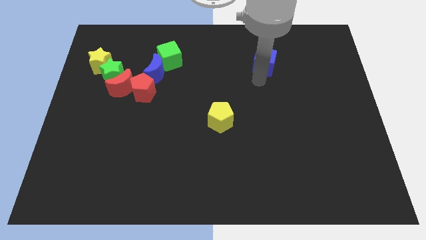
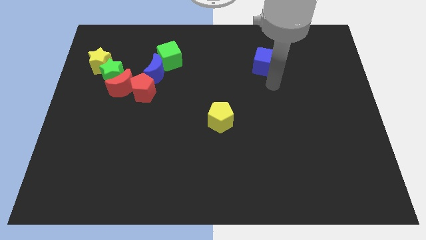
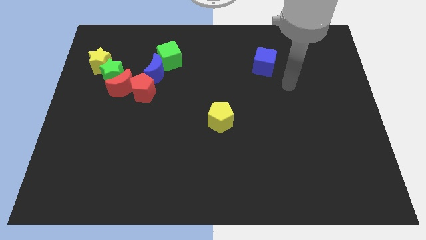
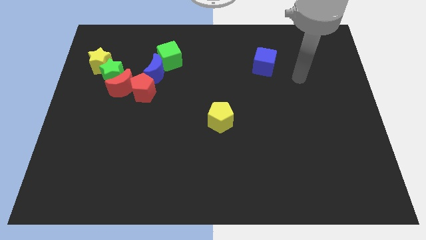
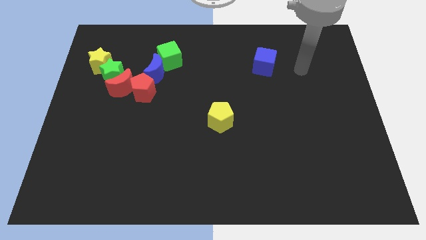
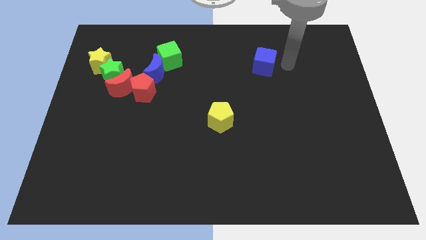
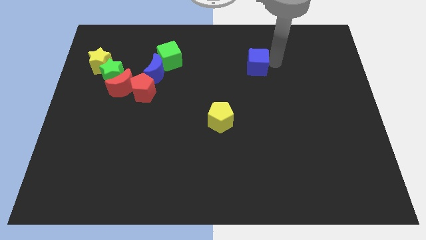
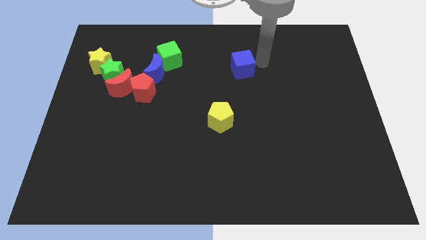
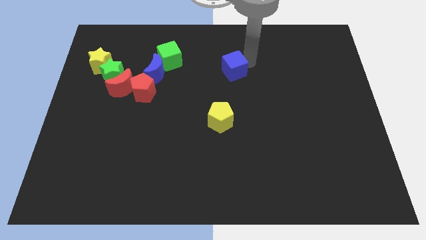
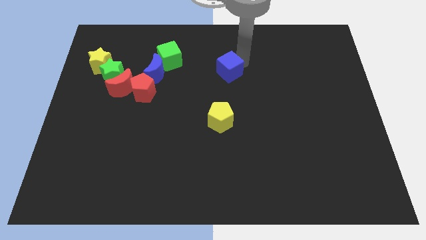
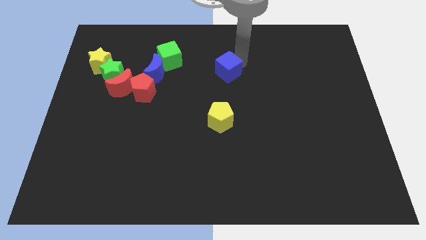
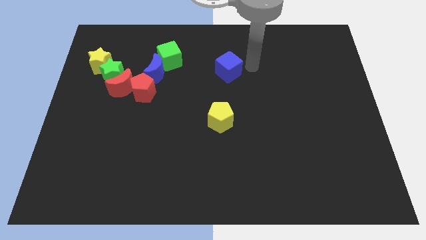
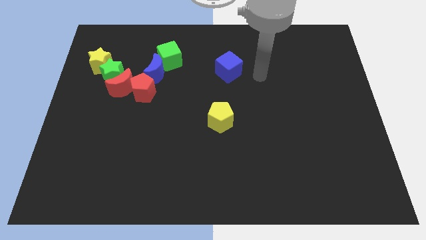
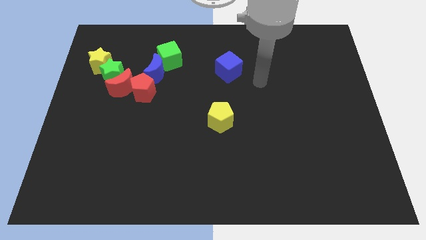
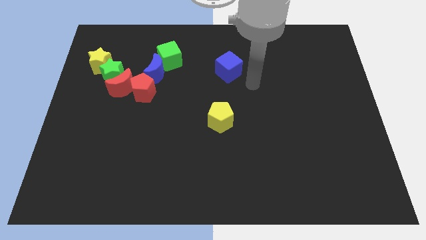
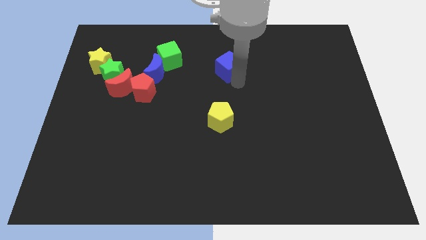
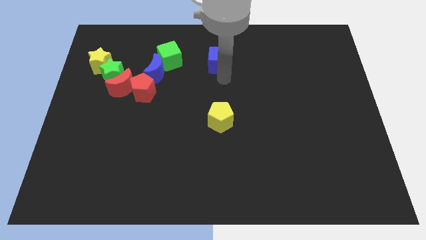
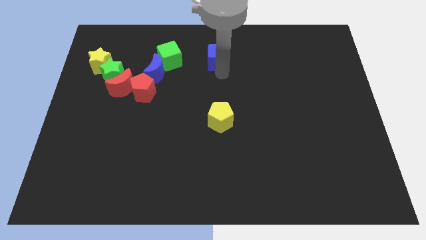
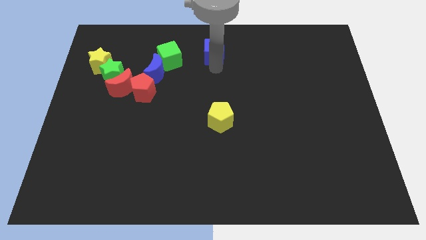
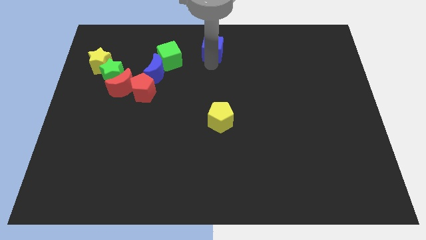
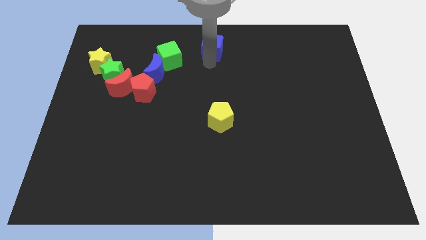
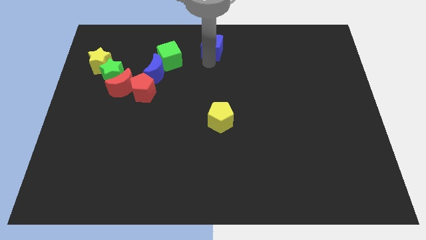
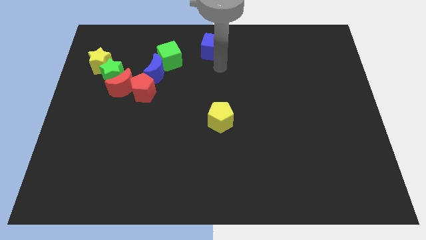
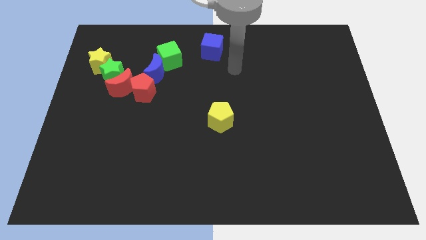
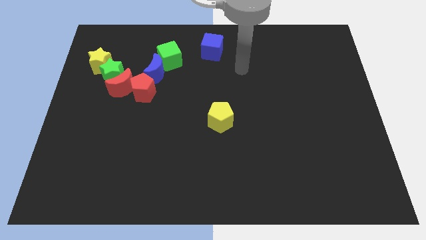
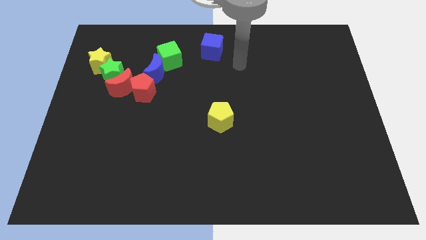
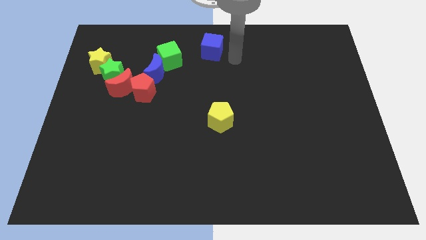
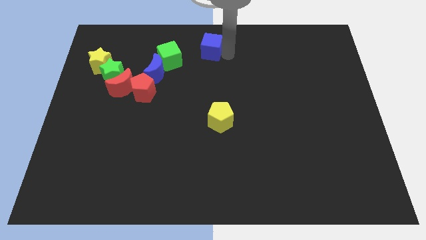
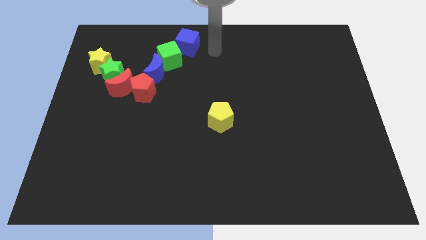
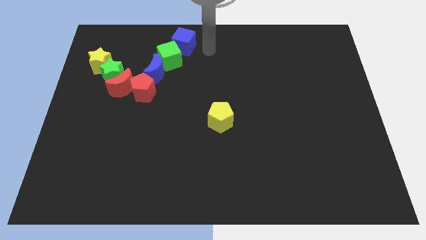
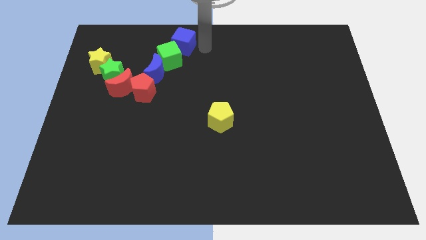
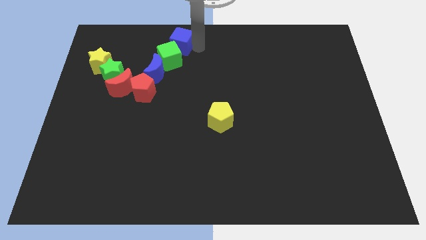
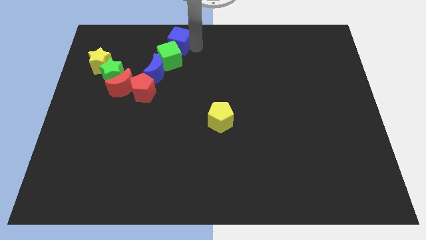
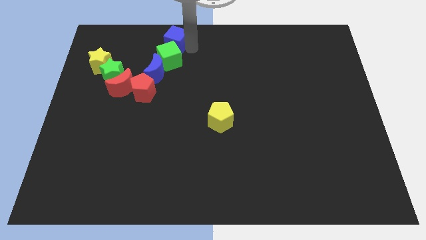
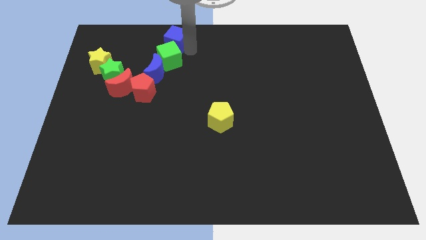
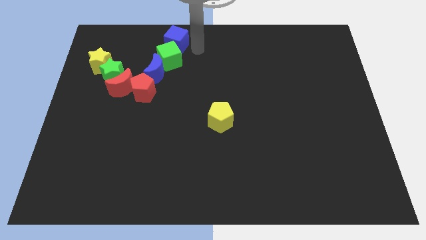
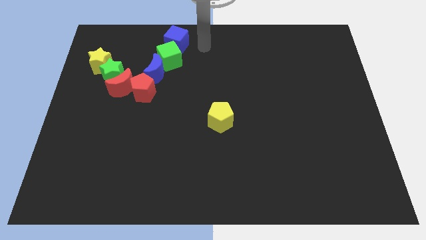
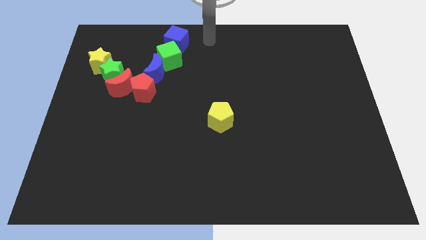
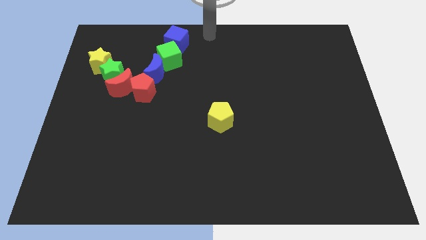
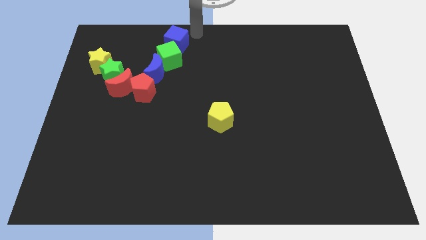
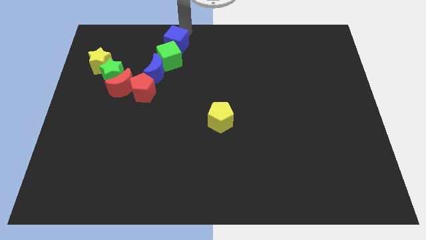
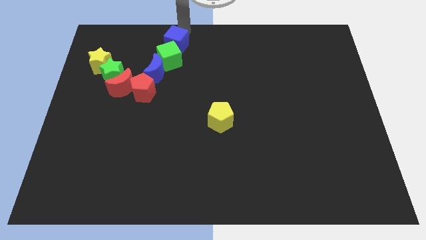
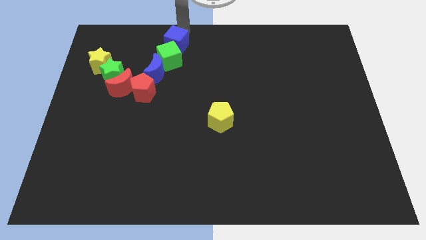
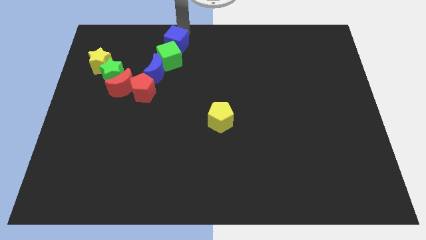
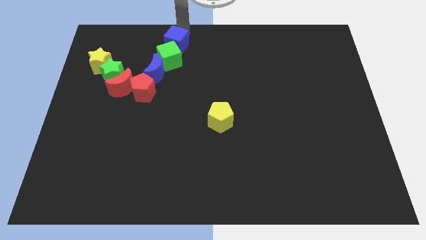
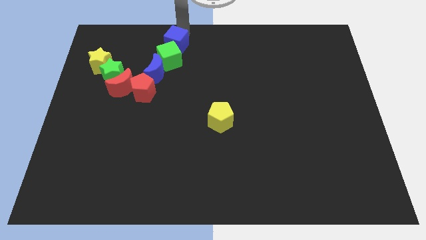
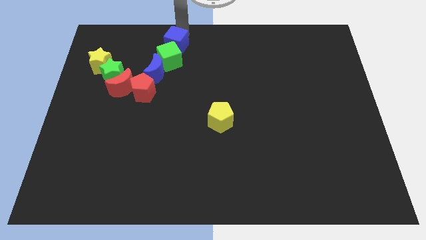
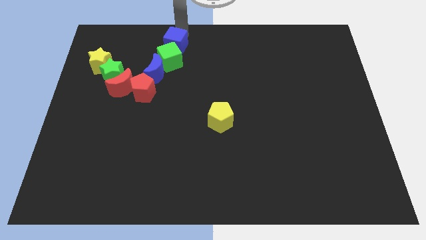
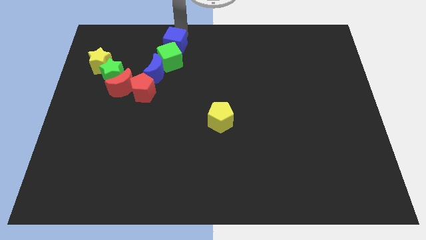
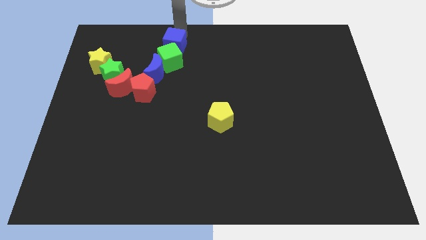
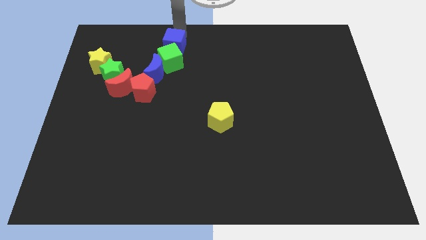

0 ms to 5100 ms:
place blue cube on top of green cube

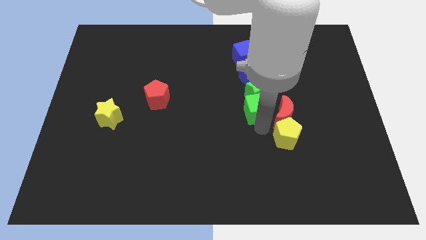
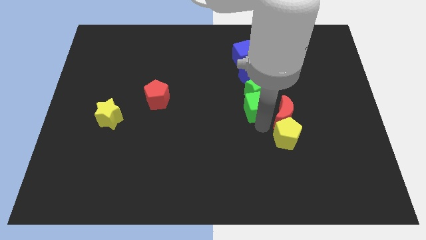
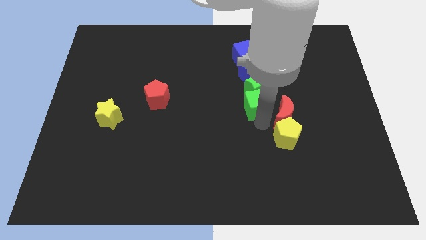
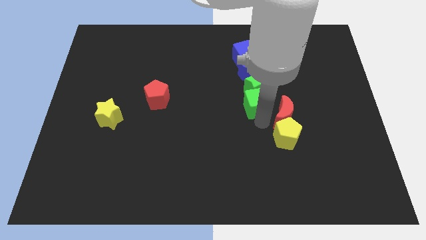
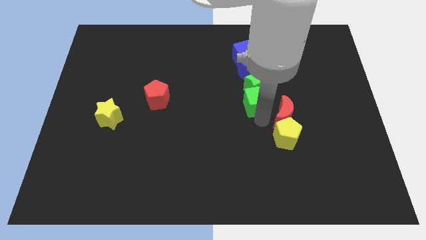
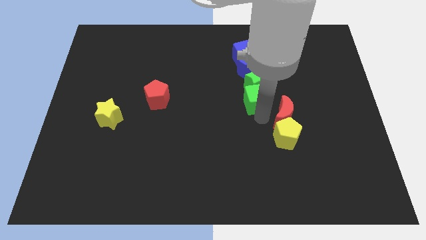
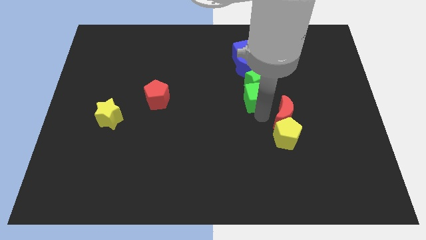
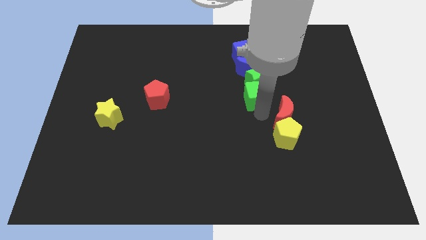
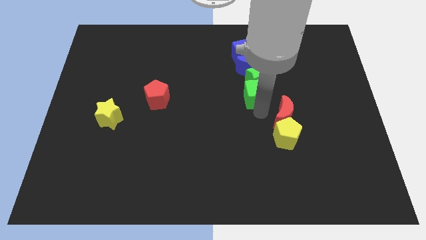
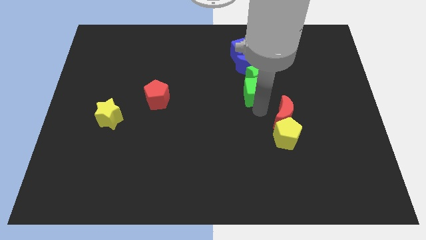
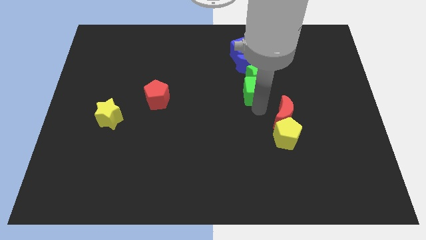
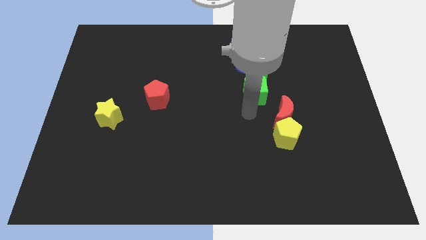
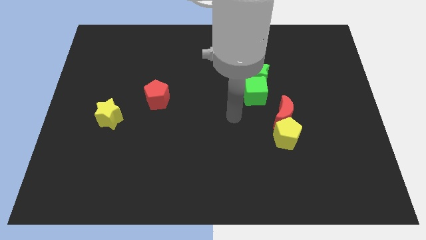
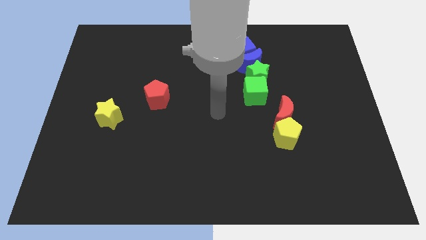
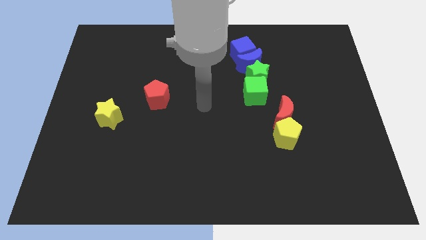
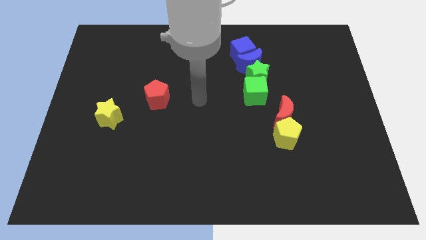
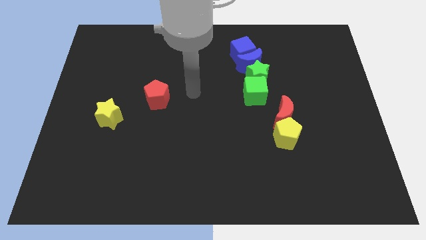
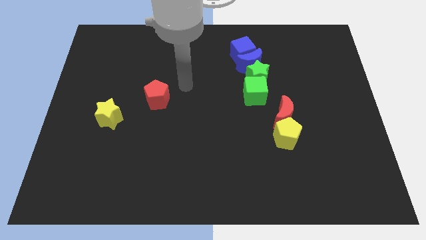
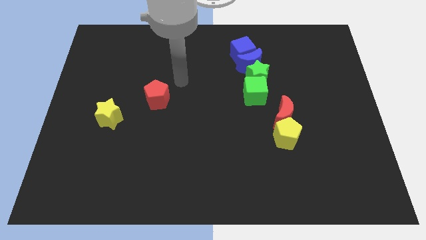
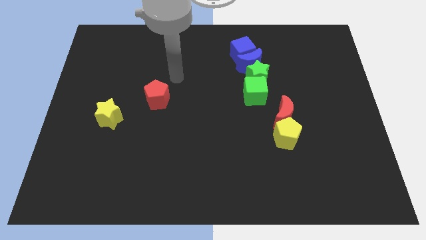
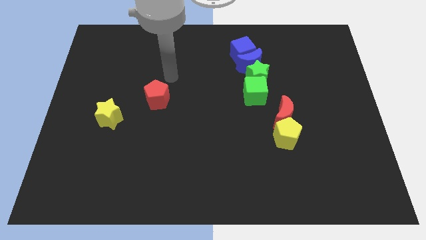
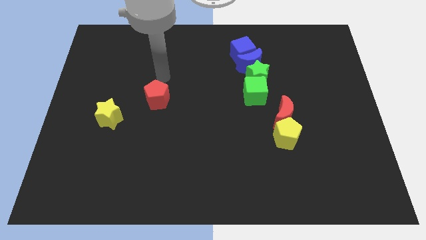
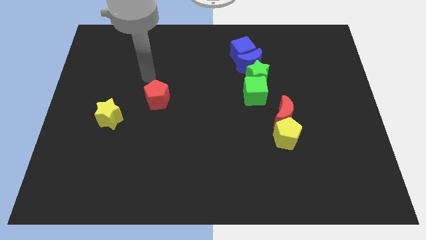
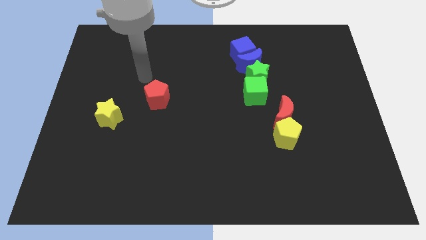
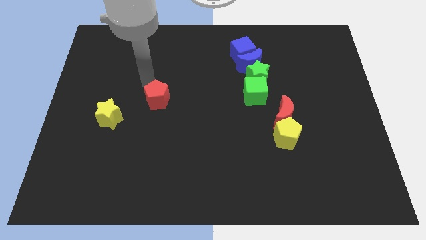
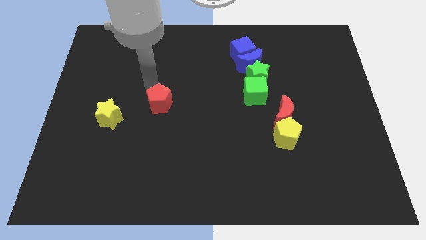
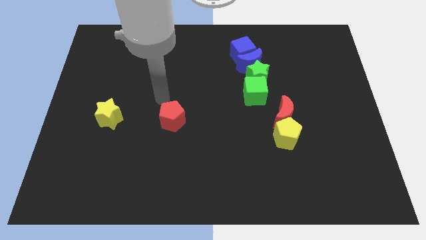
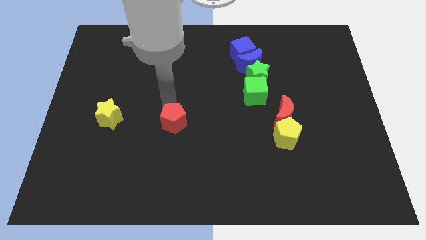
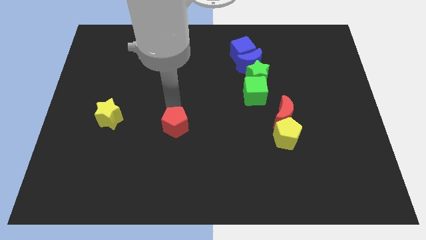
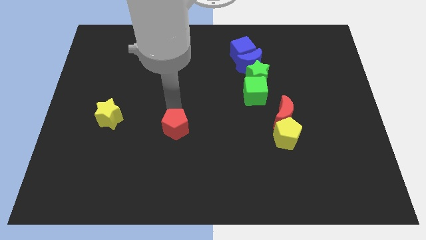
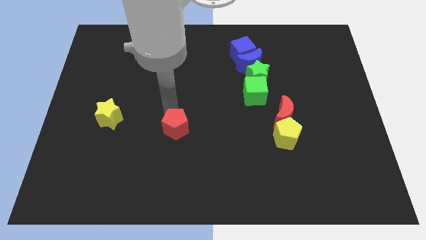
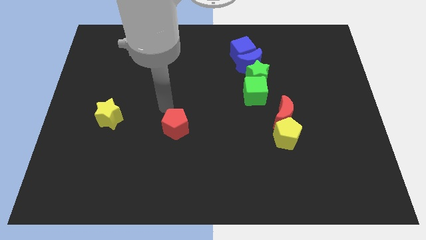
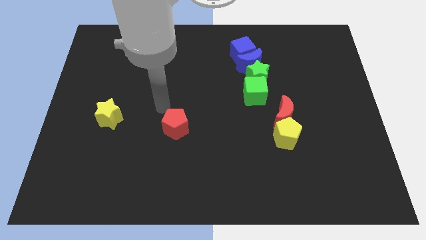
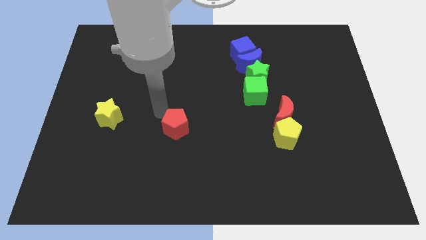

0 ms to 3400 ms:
push the red pentagon towards down

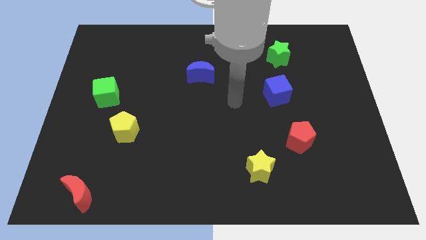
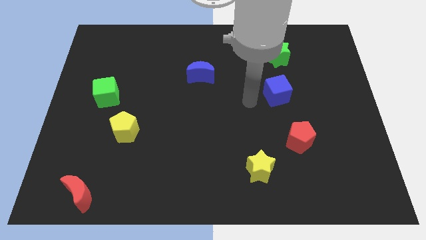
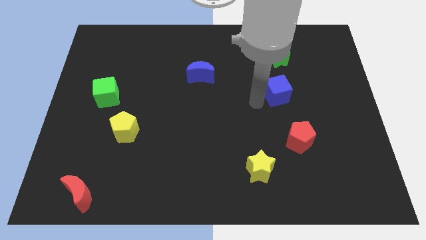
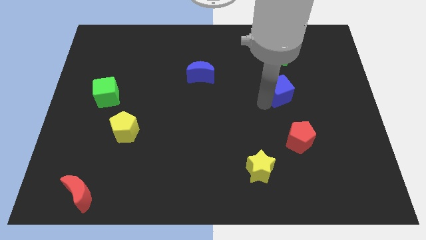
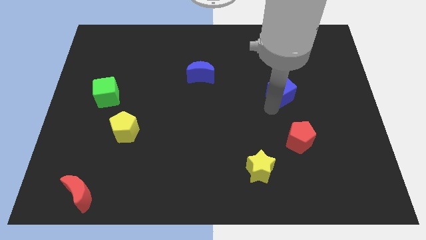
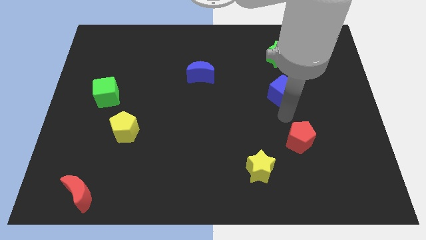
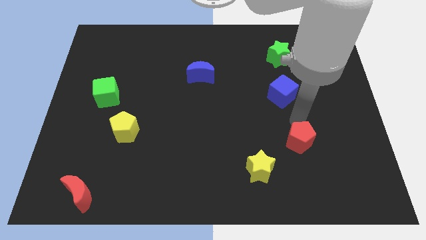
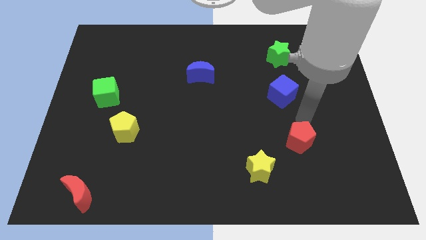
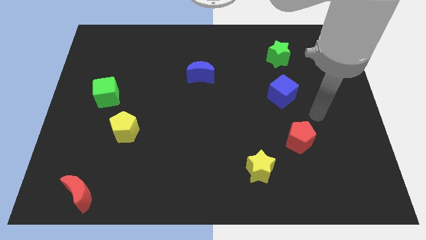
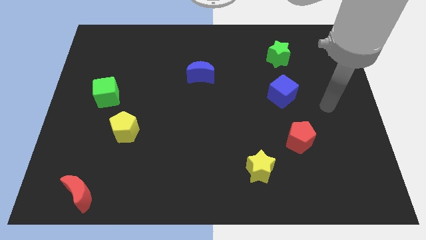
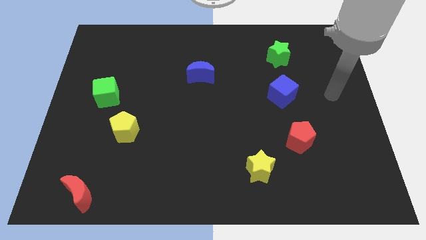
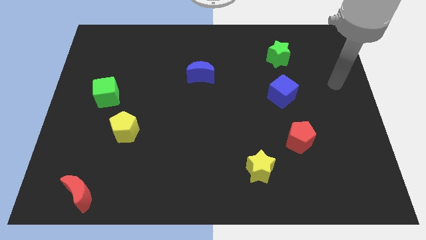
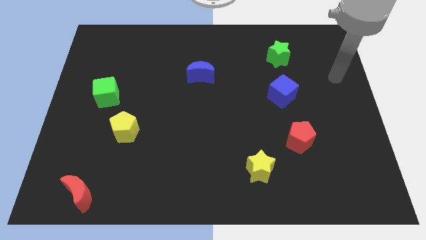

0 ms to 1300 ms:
move blue cube slightly right
